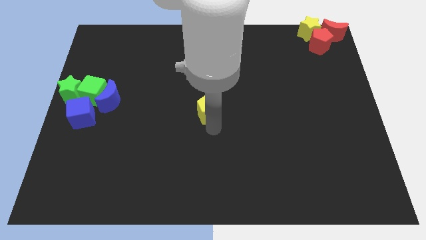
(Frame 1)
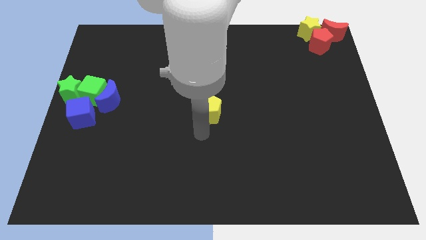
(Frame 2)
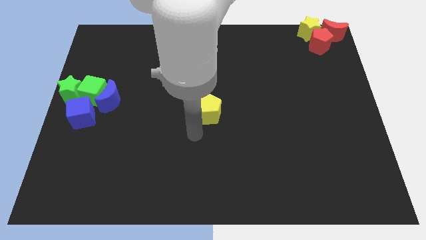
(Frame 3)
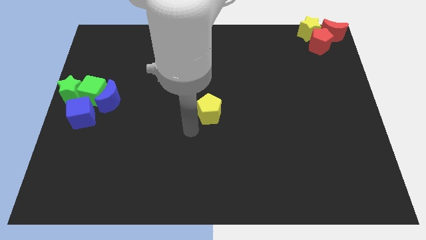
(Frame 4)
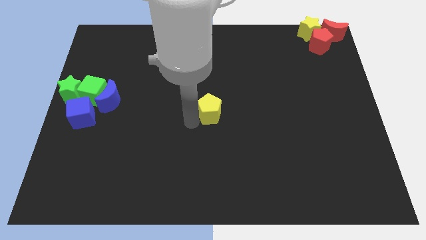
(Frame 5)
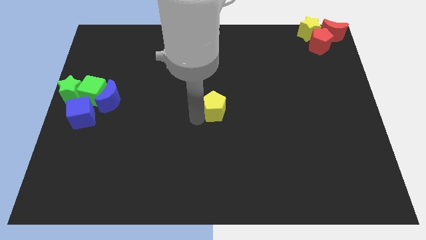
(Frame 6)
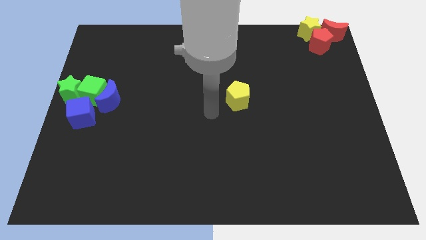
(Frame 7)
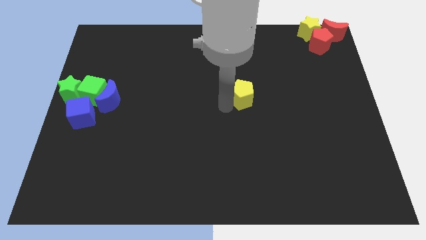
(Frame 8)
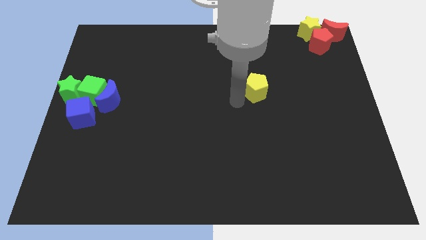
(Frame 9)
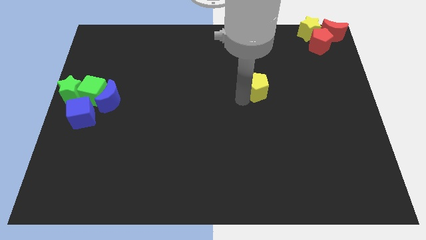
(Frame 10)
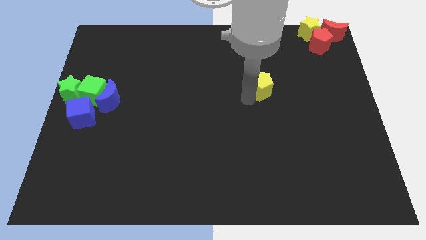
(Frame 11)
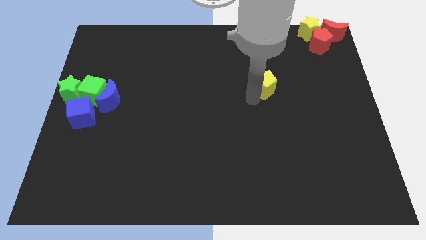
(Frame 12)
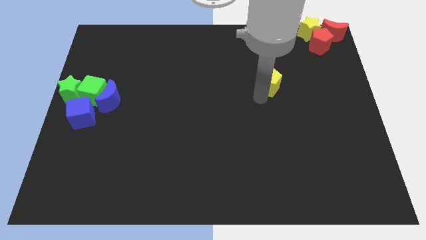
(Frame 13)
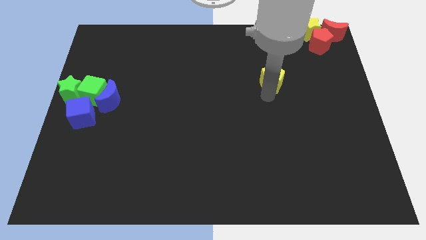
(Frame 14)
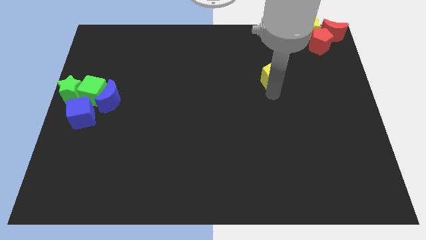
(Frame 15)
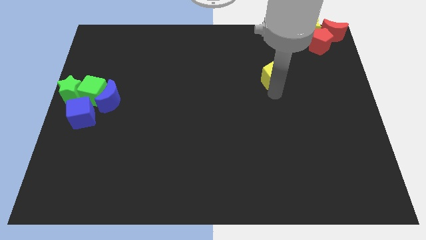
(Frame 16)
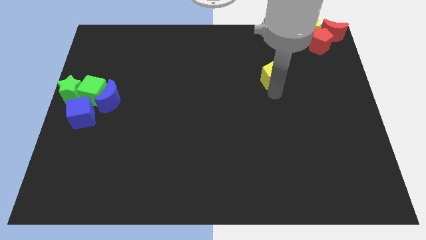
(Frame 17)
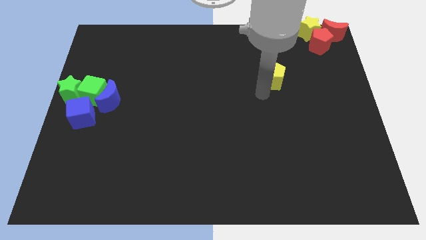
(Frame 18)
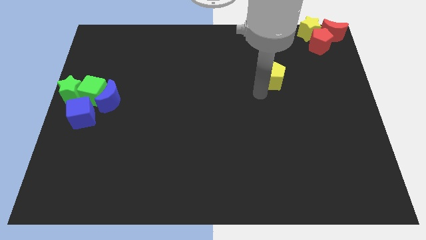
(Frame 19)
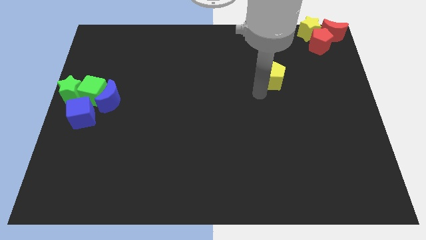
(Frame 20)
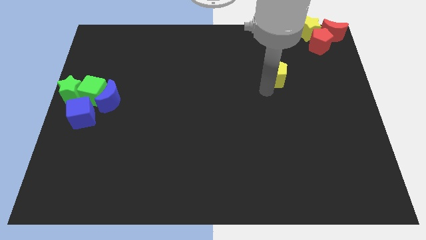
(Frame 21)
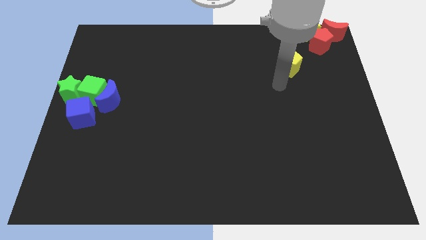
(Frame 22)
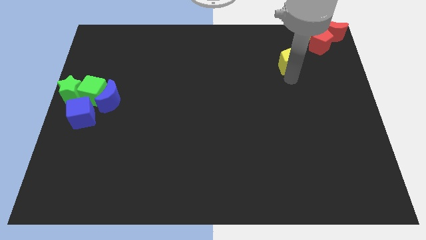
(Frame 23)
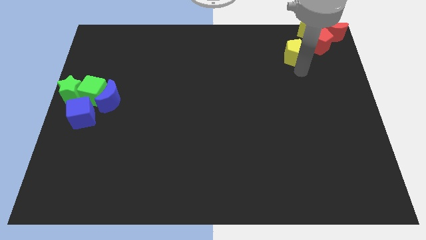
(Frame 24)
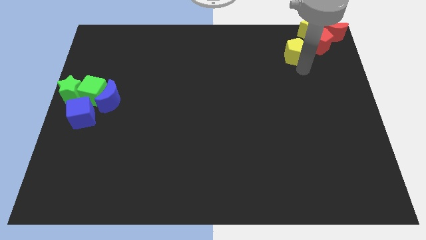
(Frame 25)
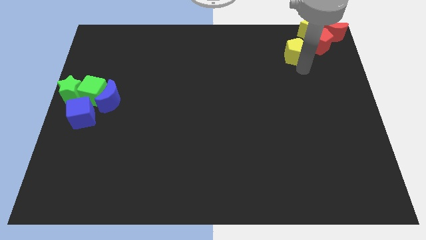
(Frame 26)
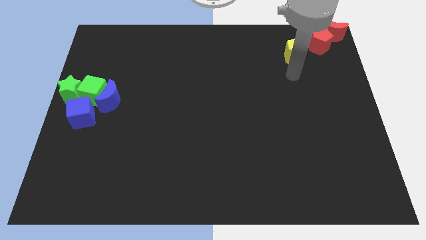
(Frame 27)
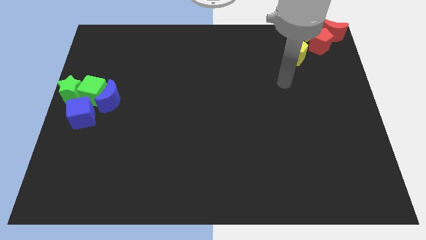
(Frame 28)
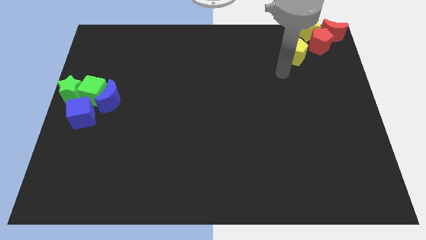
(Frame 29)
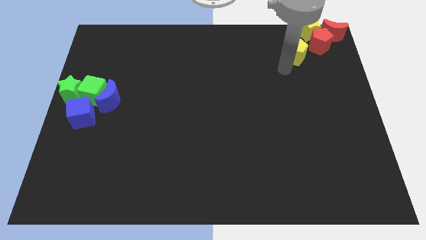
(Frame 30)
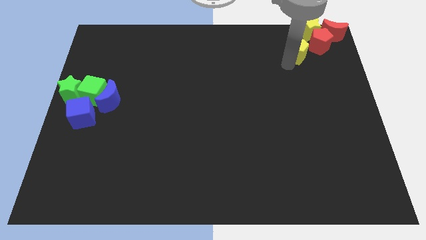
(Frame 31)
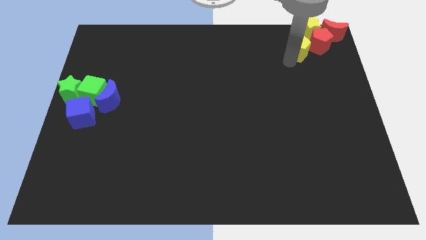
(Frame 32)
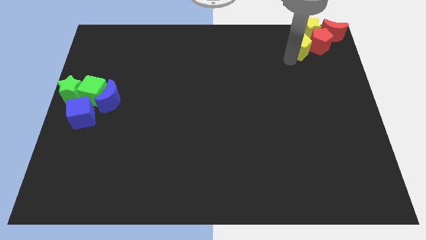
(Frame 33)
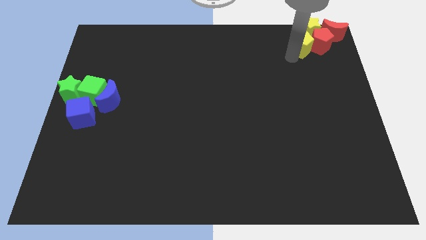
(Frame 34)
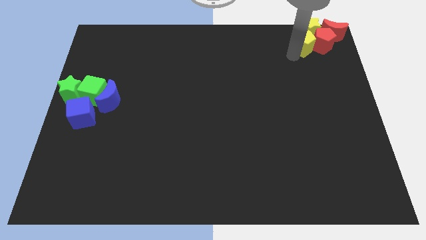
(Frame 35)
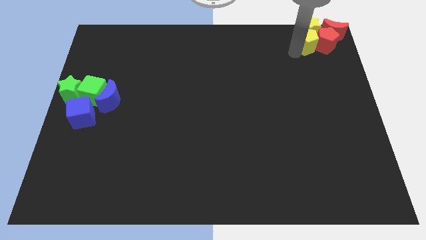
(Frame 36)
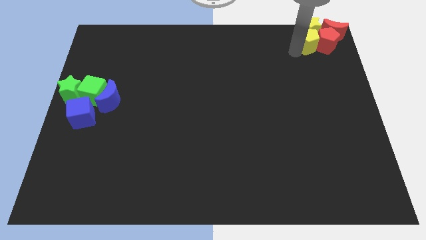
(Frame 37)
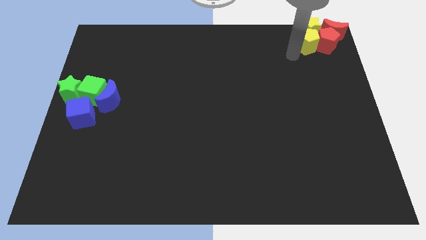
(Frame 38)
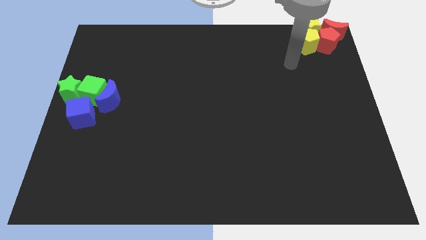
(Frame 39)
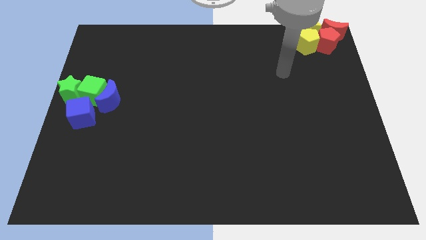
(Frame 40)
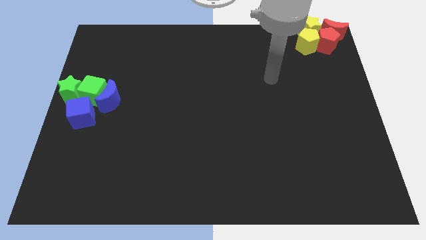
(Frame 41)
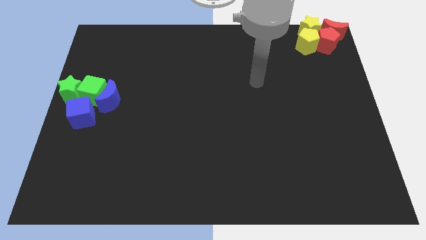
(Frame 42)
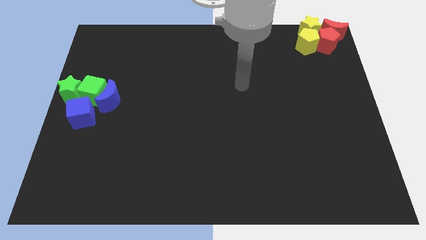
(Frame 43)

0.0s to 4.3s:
place yellow pentagon below yellow star

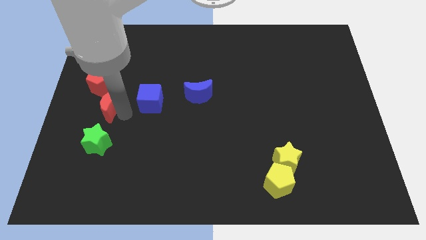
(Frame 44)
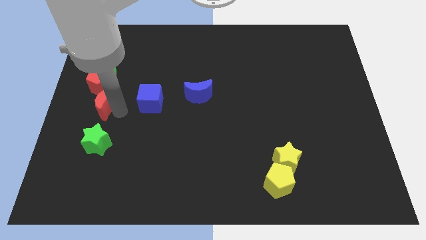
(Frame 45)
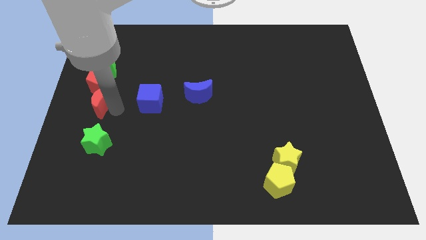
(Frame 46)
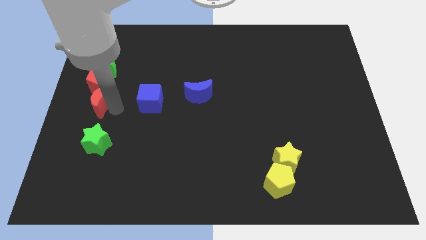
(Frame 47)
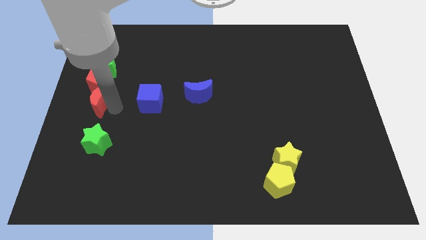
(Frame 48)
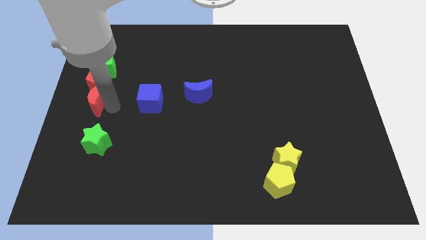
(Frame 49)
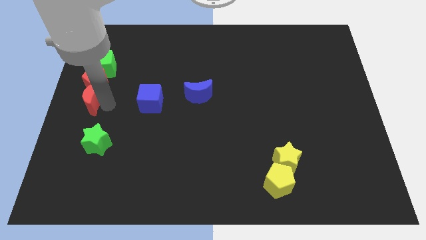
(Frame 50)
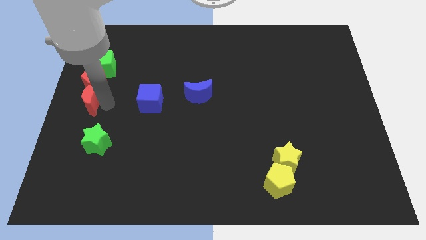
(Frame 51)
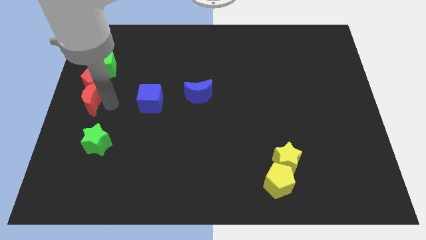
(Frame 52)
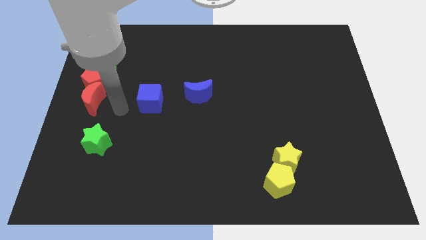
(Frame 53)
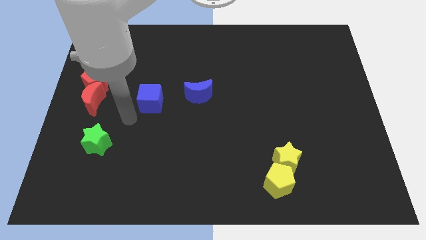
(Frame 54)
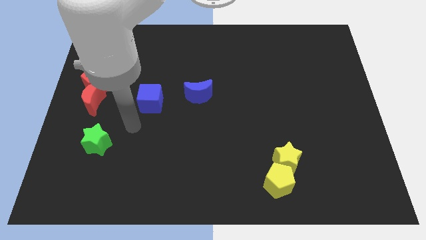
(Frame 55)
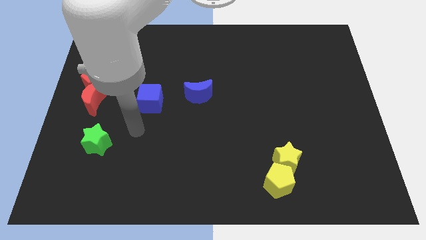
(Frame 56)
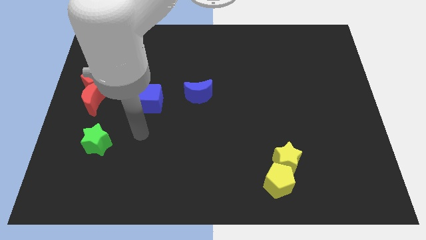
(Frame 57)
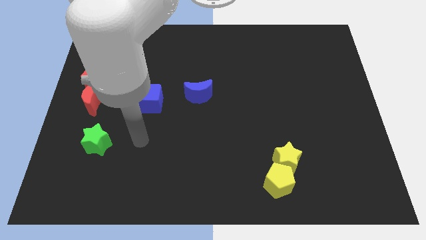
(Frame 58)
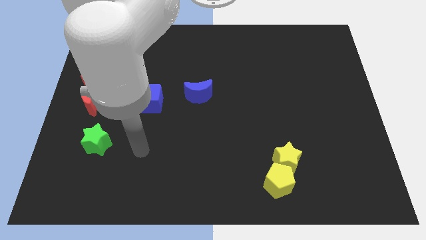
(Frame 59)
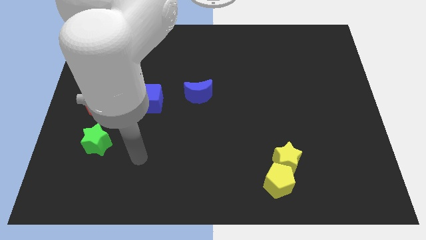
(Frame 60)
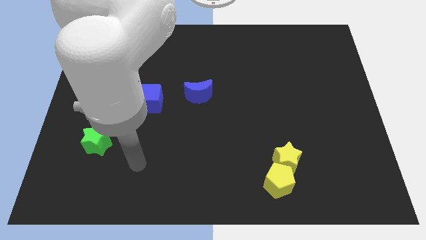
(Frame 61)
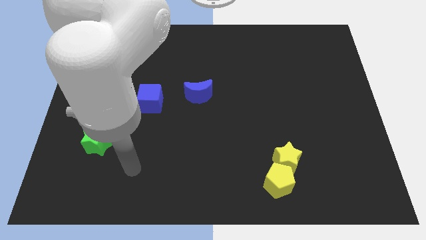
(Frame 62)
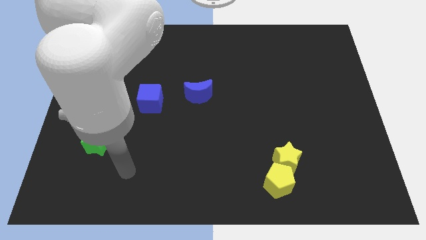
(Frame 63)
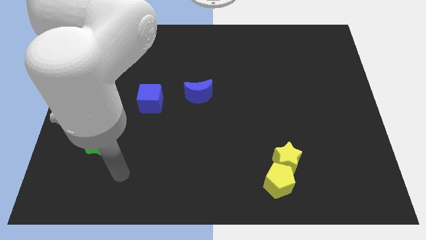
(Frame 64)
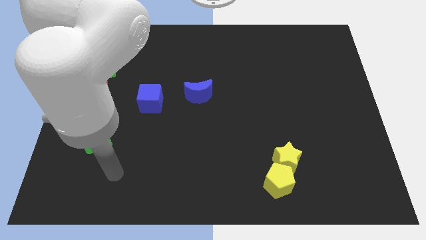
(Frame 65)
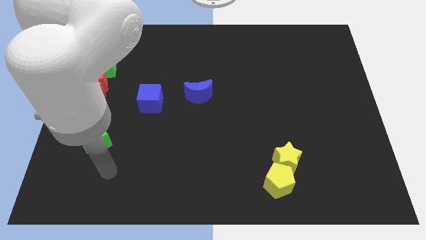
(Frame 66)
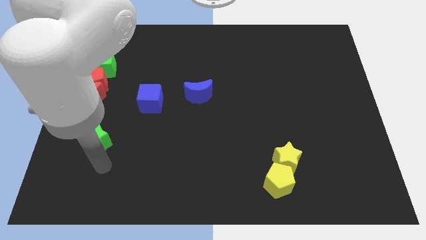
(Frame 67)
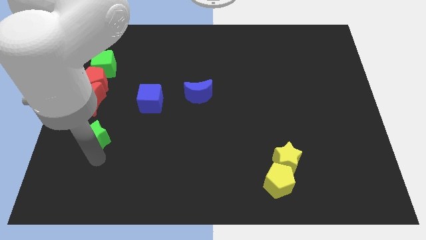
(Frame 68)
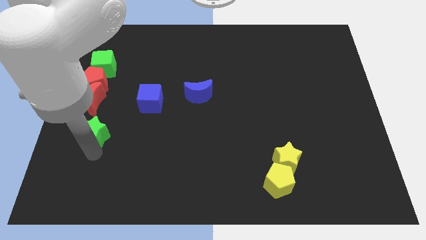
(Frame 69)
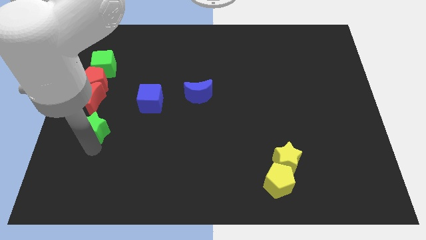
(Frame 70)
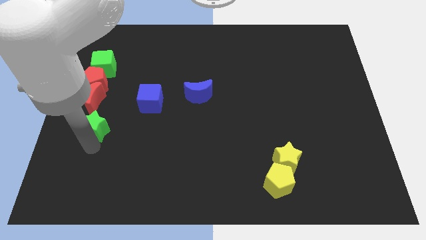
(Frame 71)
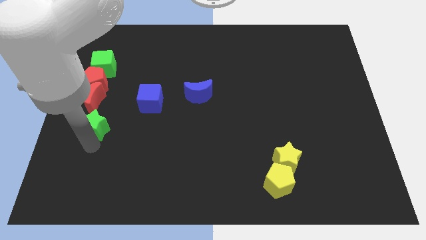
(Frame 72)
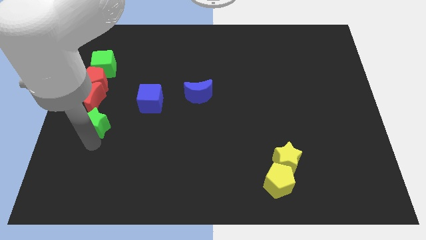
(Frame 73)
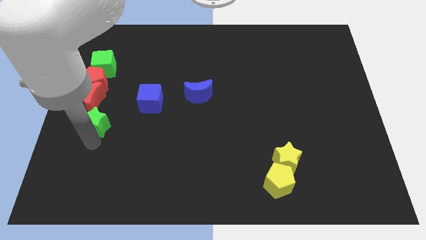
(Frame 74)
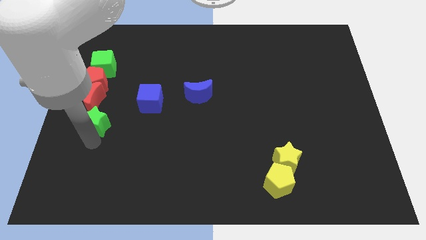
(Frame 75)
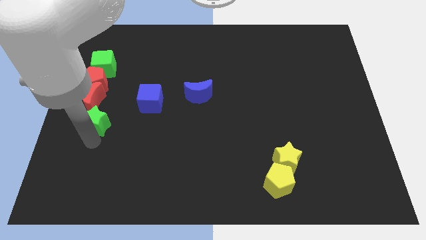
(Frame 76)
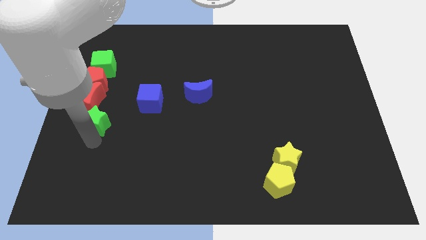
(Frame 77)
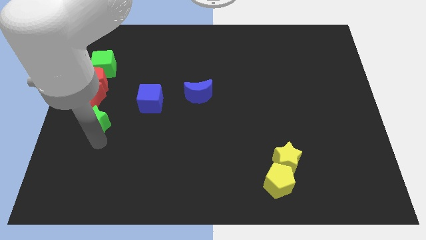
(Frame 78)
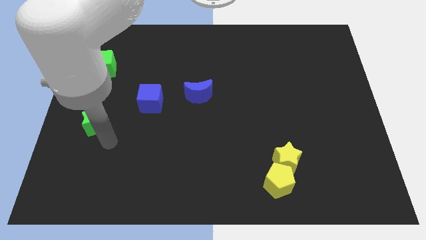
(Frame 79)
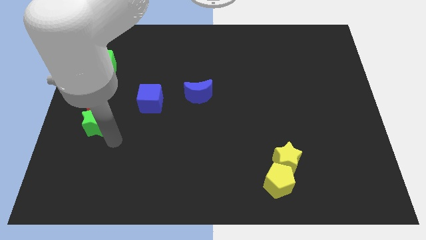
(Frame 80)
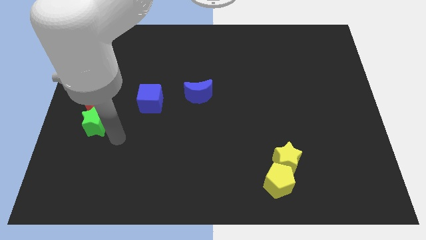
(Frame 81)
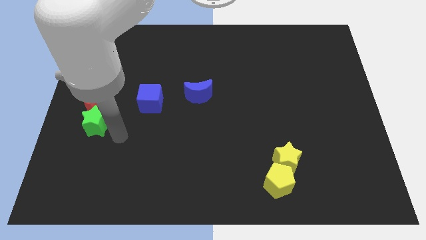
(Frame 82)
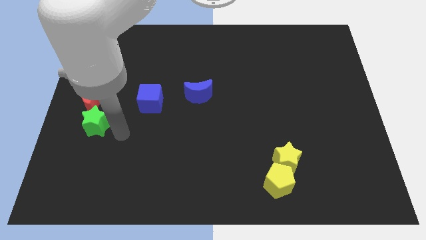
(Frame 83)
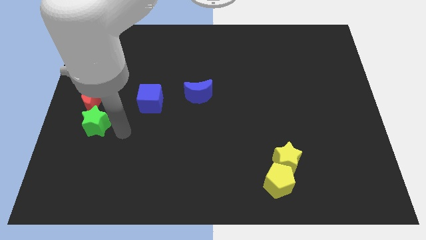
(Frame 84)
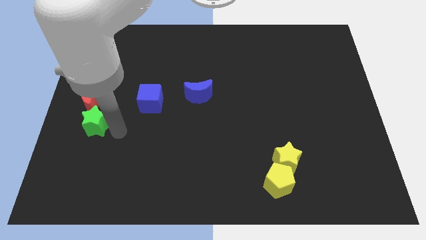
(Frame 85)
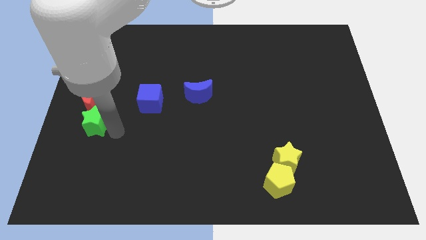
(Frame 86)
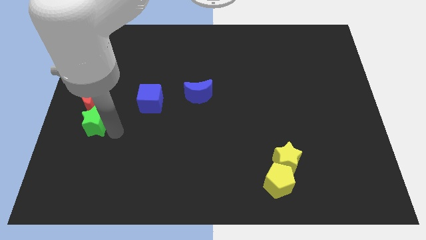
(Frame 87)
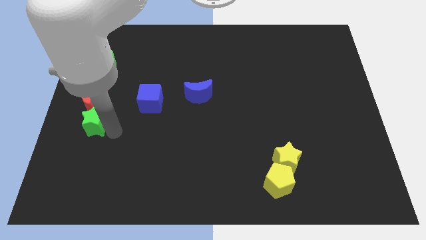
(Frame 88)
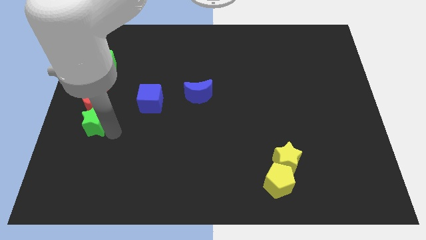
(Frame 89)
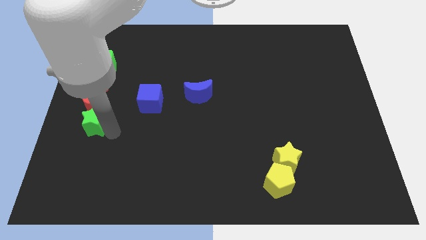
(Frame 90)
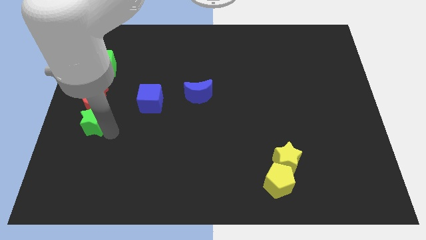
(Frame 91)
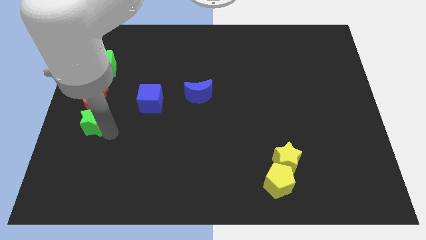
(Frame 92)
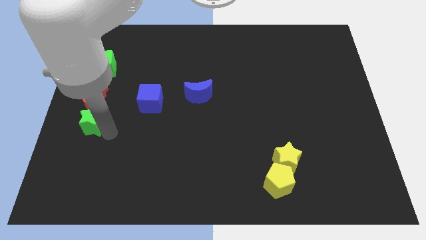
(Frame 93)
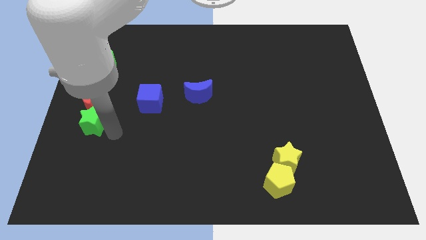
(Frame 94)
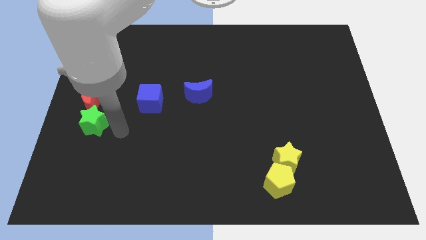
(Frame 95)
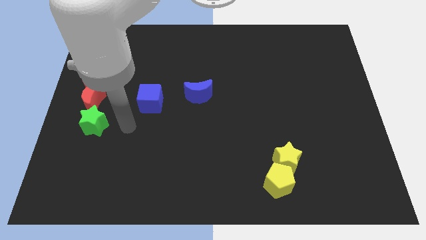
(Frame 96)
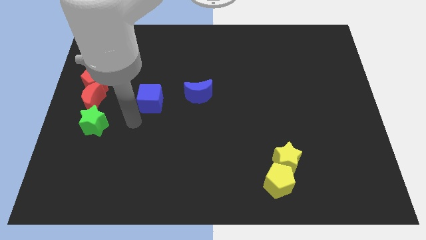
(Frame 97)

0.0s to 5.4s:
place the green star to the bottom side of red crescent
